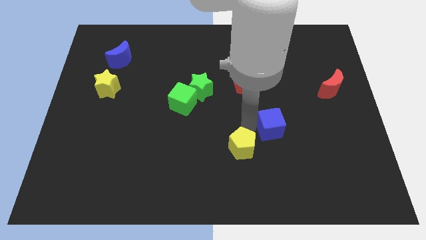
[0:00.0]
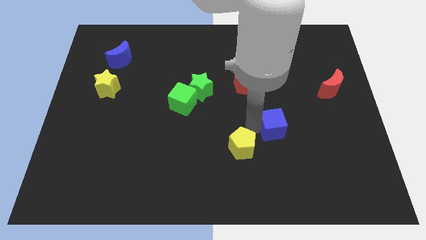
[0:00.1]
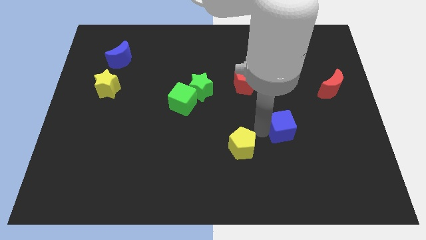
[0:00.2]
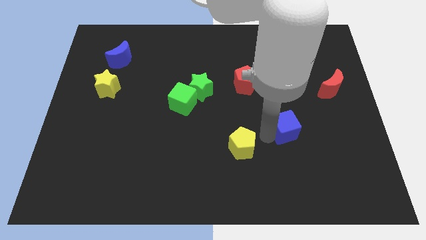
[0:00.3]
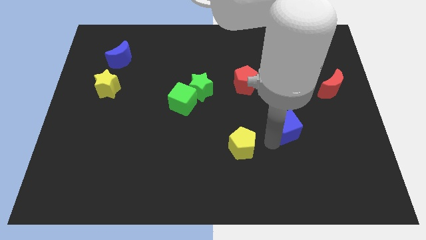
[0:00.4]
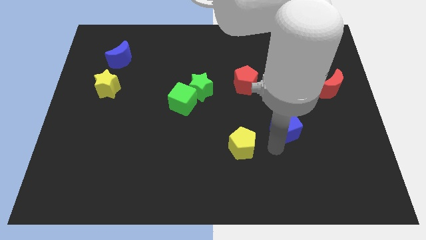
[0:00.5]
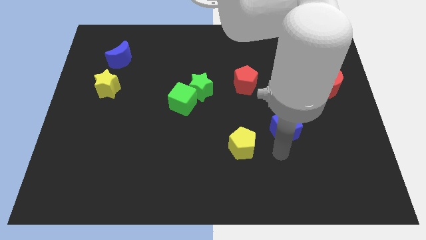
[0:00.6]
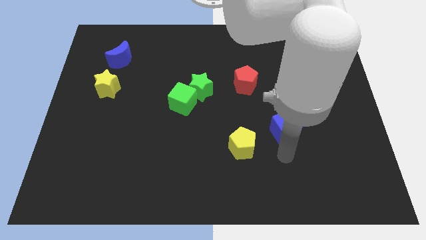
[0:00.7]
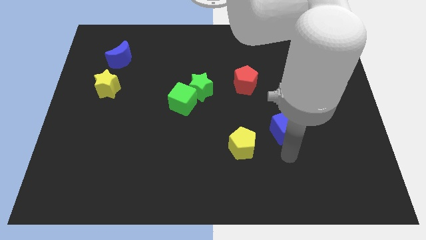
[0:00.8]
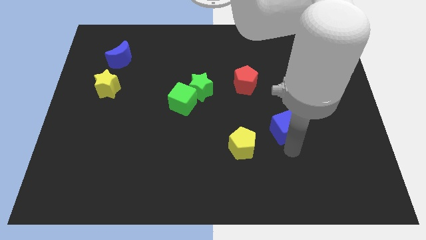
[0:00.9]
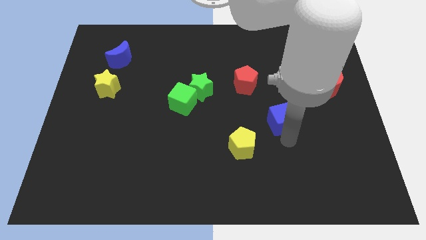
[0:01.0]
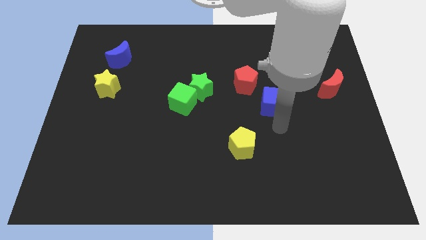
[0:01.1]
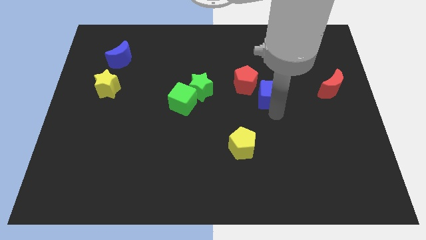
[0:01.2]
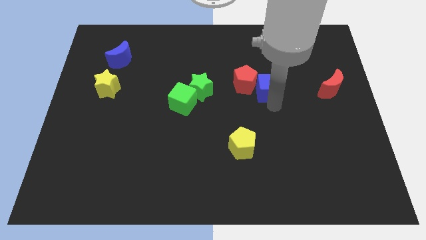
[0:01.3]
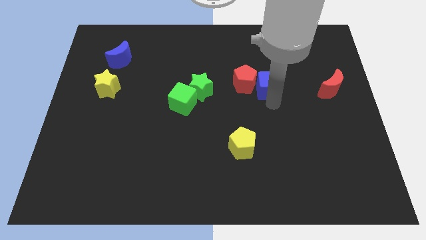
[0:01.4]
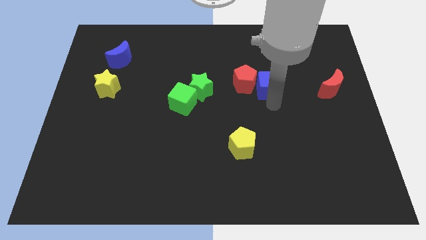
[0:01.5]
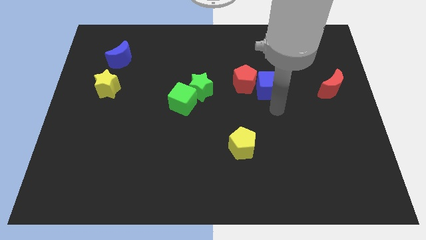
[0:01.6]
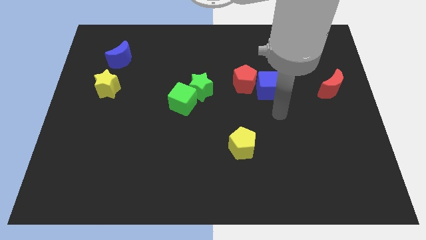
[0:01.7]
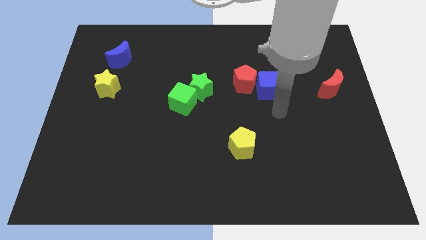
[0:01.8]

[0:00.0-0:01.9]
move the blue cube to the right side of the red pentagon

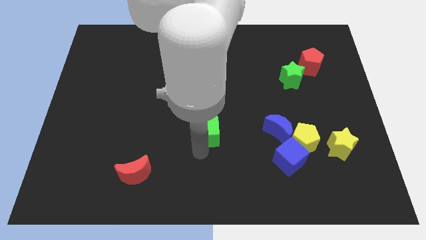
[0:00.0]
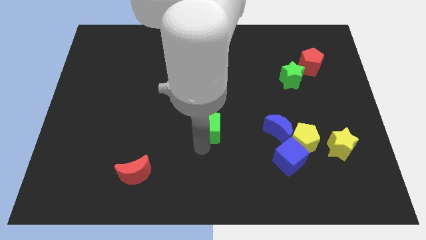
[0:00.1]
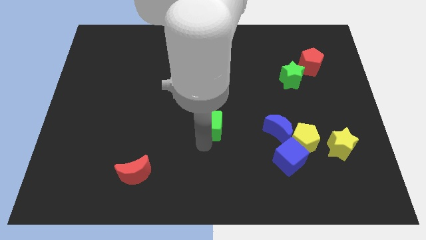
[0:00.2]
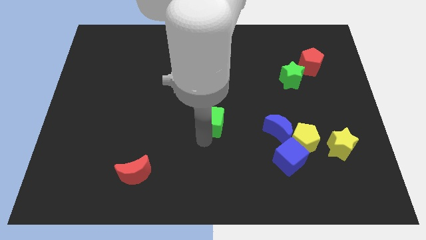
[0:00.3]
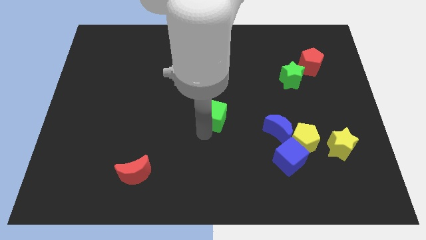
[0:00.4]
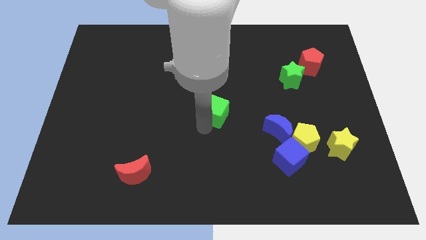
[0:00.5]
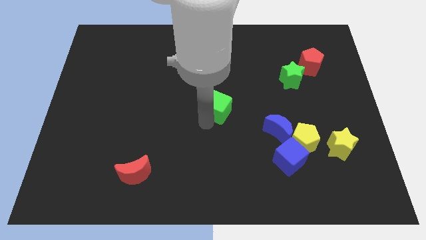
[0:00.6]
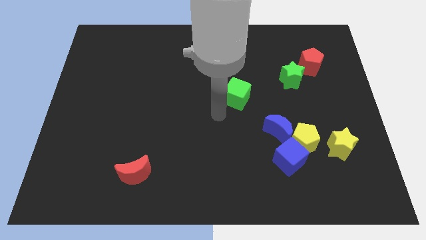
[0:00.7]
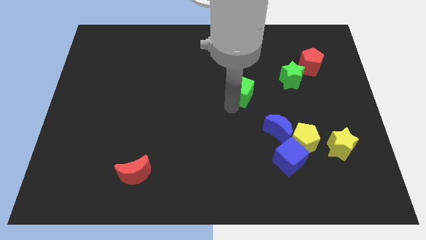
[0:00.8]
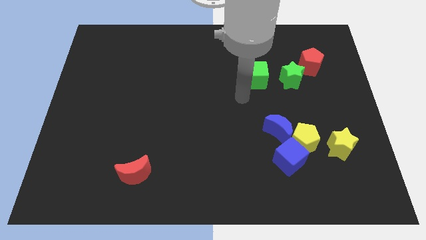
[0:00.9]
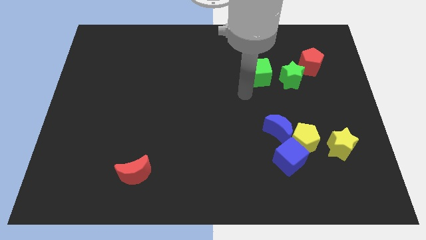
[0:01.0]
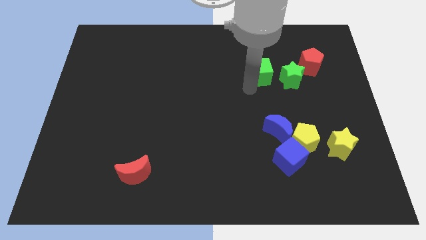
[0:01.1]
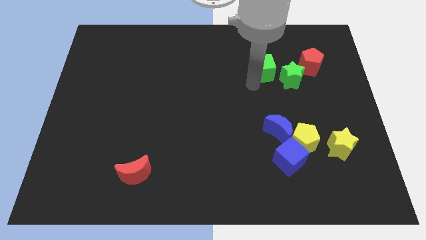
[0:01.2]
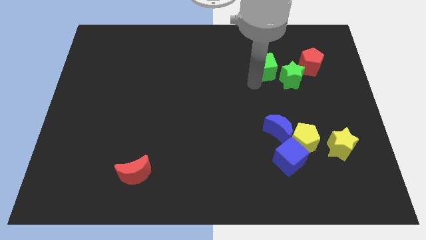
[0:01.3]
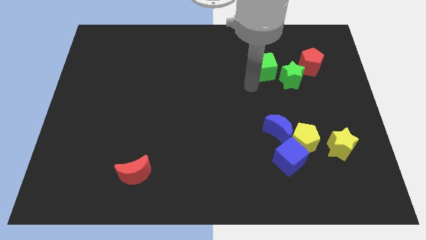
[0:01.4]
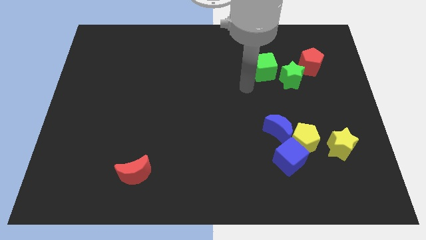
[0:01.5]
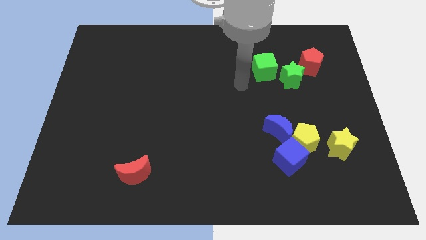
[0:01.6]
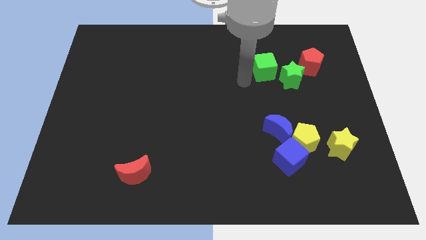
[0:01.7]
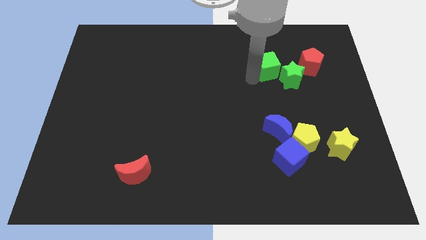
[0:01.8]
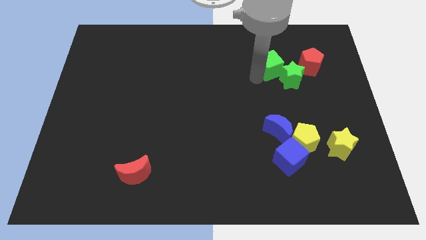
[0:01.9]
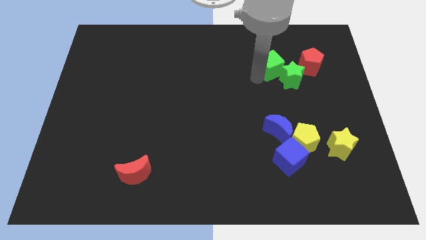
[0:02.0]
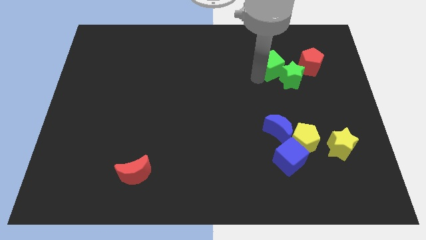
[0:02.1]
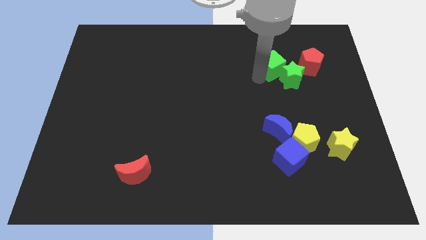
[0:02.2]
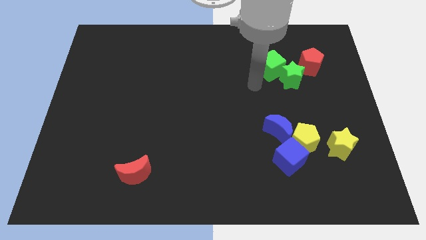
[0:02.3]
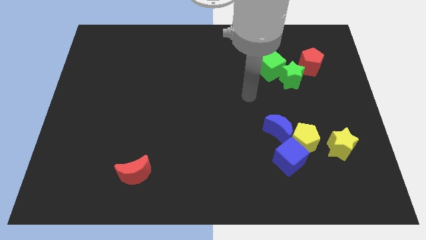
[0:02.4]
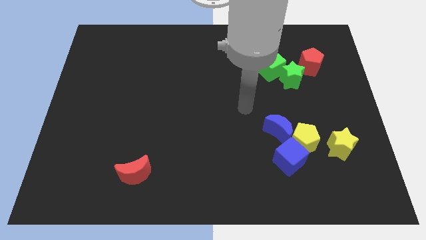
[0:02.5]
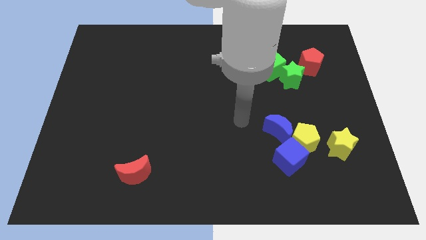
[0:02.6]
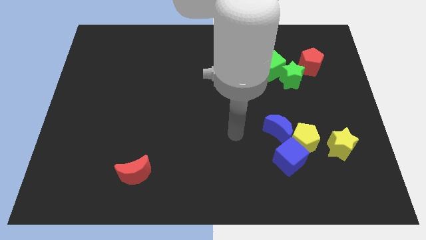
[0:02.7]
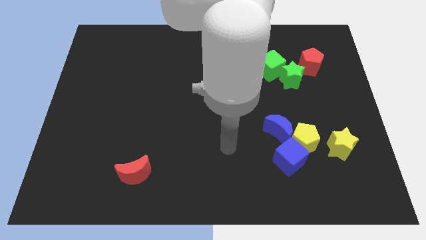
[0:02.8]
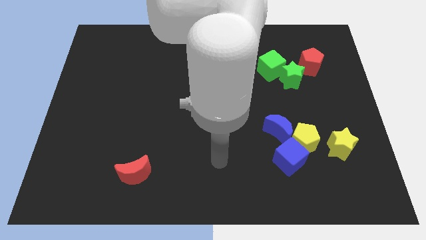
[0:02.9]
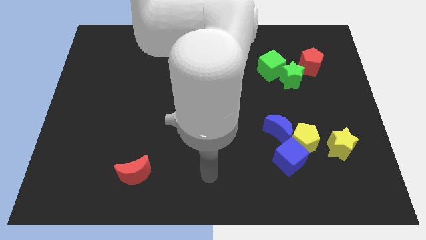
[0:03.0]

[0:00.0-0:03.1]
place the green cube on the left side of the green star

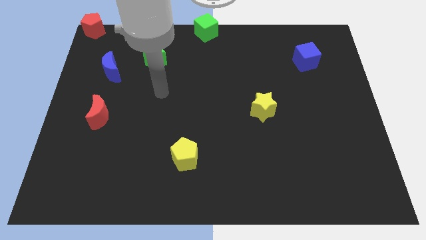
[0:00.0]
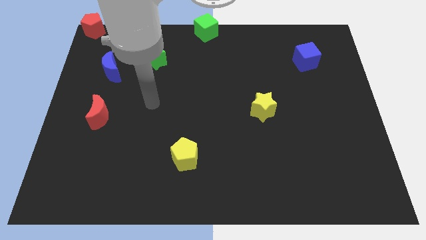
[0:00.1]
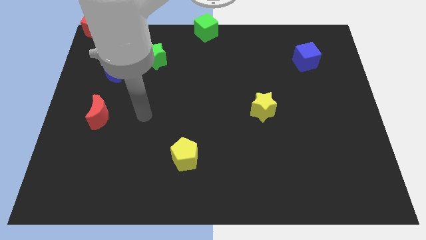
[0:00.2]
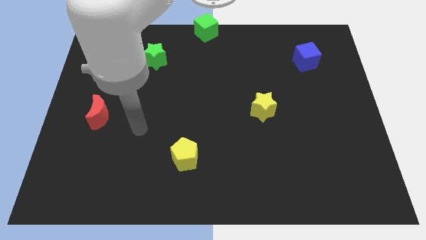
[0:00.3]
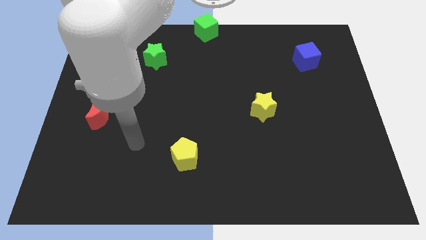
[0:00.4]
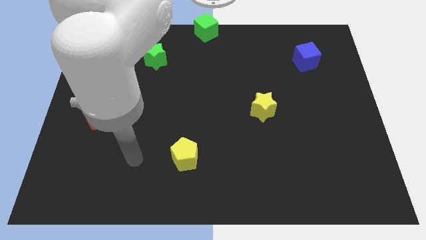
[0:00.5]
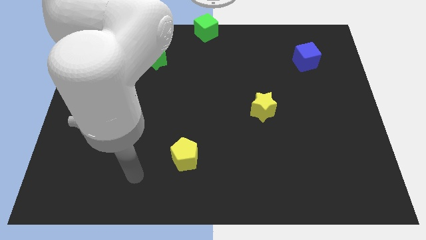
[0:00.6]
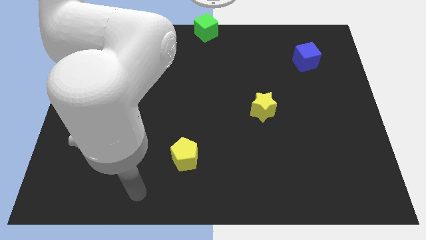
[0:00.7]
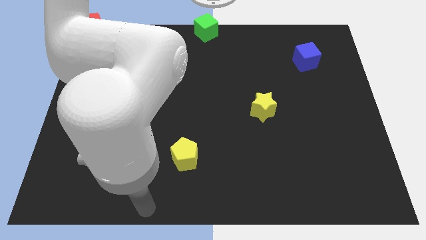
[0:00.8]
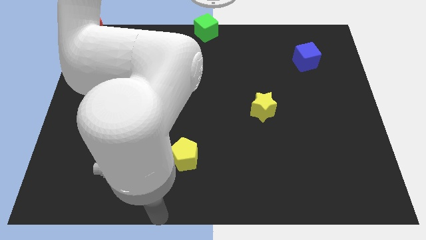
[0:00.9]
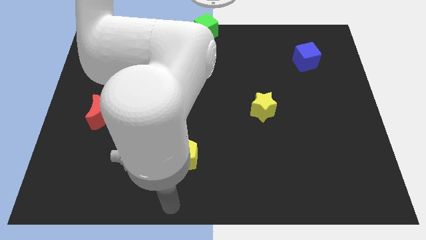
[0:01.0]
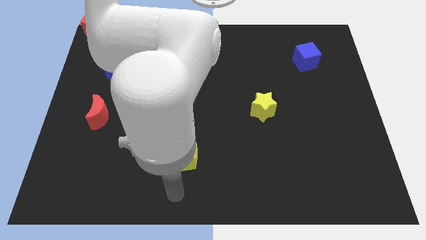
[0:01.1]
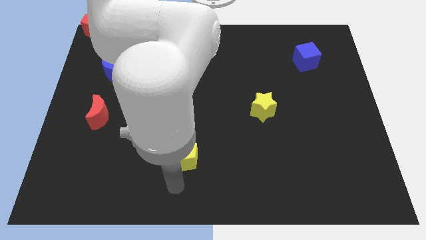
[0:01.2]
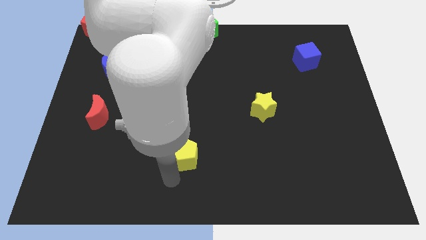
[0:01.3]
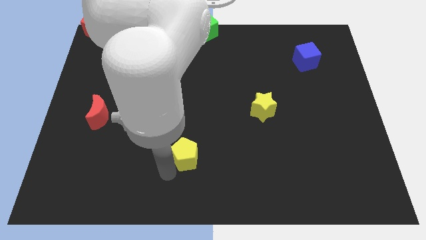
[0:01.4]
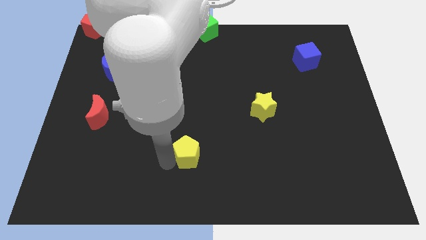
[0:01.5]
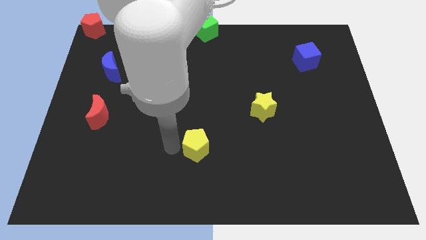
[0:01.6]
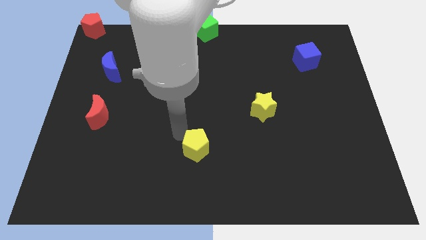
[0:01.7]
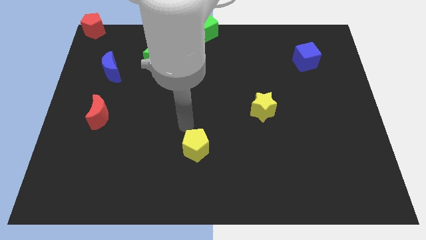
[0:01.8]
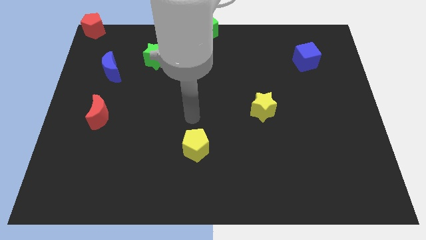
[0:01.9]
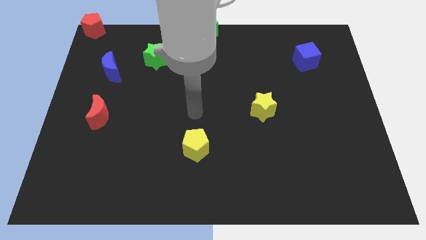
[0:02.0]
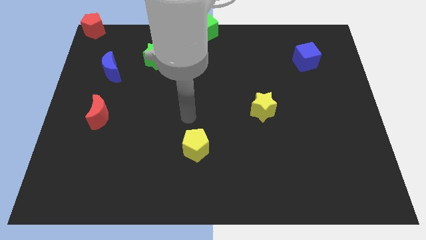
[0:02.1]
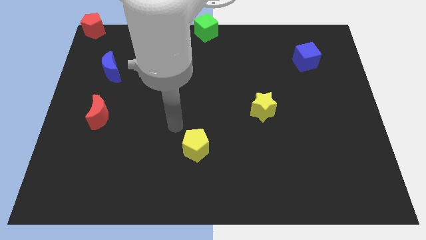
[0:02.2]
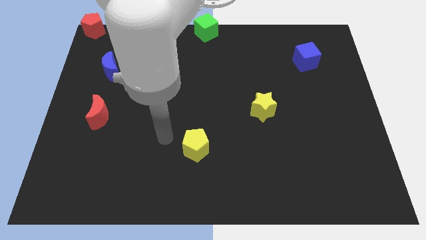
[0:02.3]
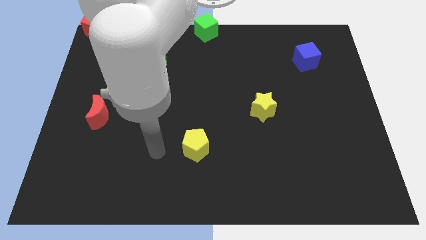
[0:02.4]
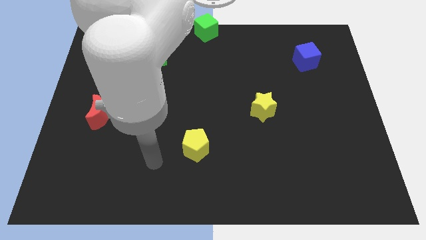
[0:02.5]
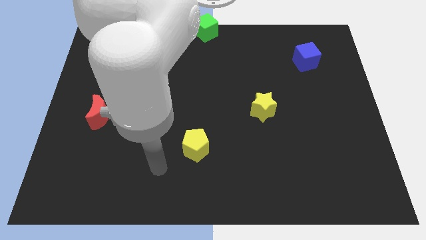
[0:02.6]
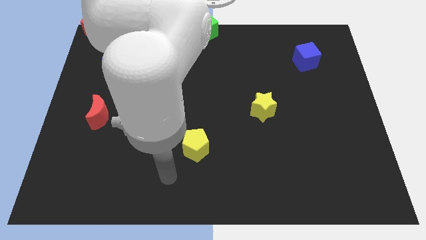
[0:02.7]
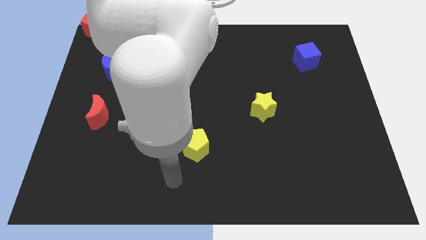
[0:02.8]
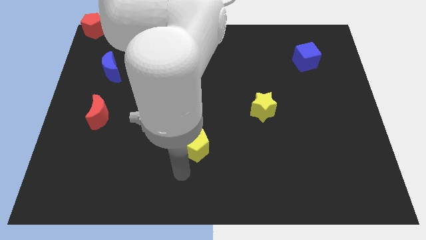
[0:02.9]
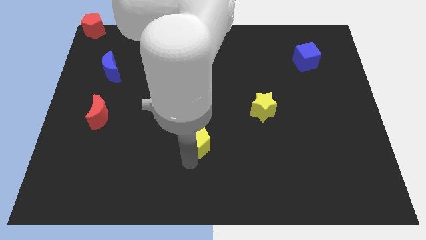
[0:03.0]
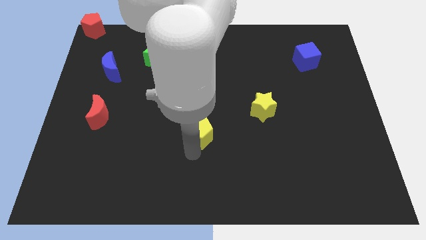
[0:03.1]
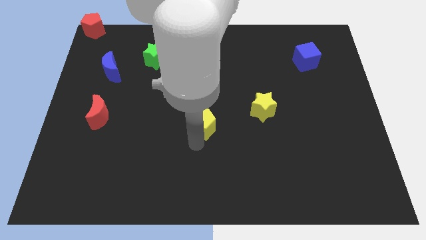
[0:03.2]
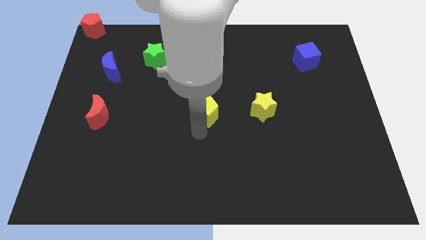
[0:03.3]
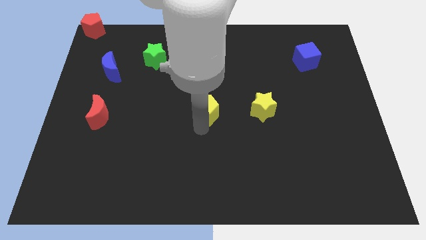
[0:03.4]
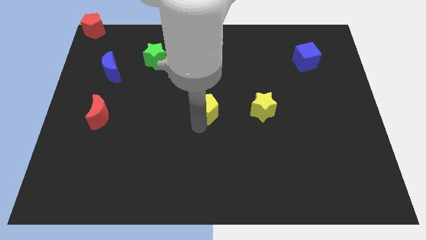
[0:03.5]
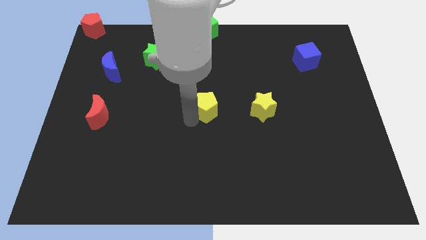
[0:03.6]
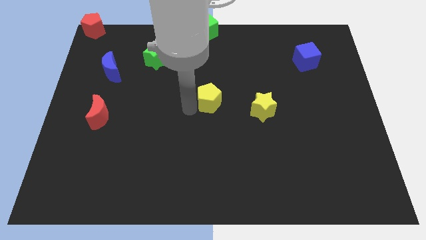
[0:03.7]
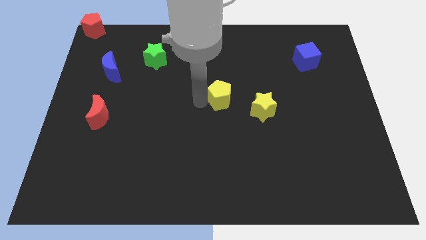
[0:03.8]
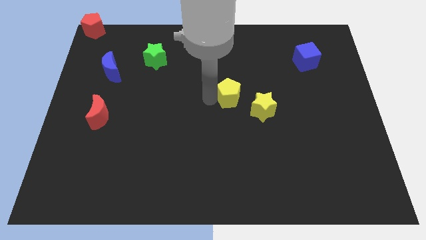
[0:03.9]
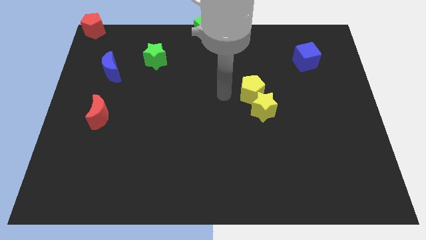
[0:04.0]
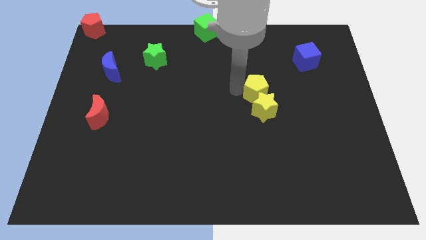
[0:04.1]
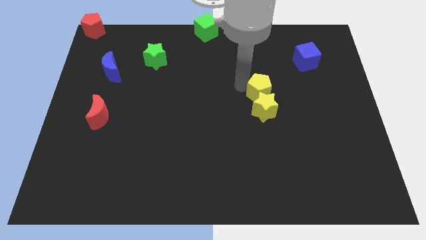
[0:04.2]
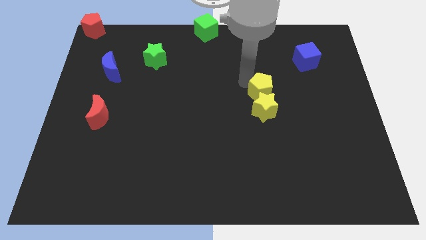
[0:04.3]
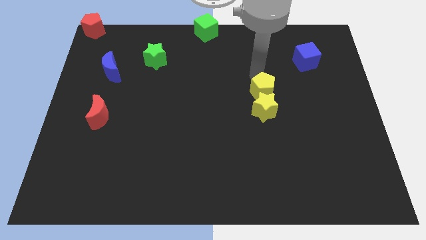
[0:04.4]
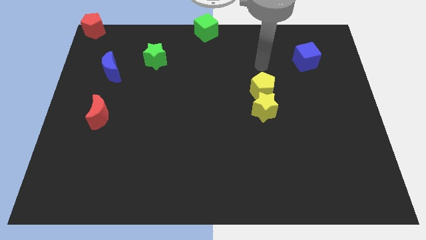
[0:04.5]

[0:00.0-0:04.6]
move the yellow pentagon above the yellow star
